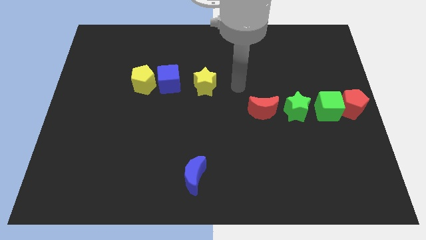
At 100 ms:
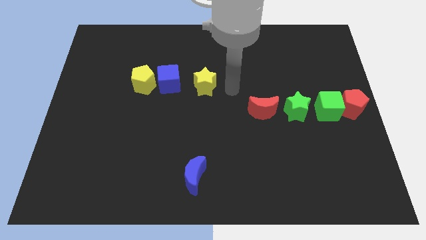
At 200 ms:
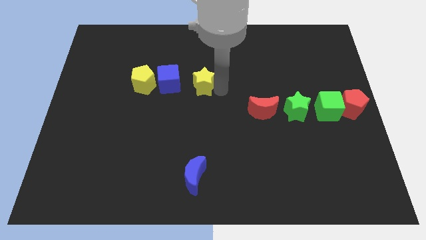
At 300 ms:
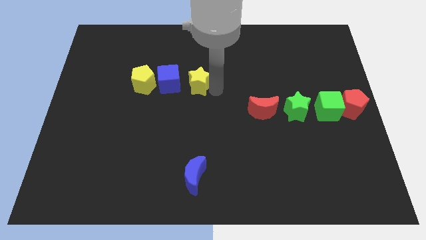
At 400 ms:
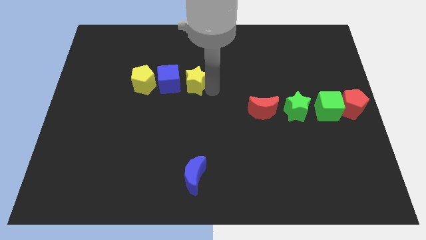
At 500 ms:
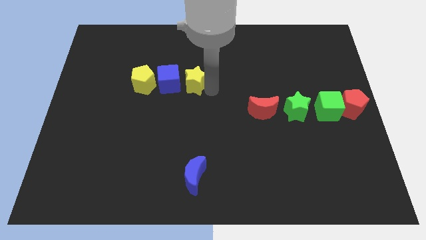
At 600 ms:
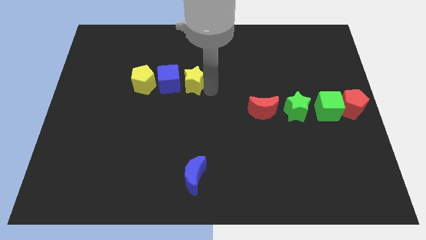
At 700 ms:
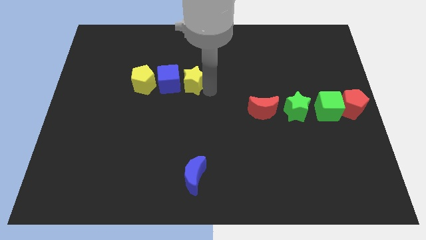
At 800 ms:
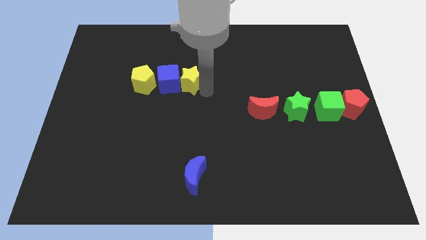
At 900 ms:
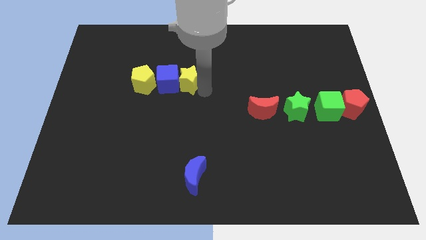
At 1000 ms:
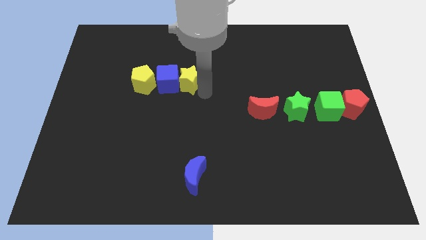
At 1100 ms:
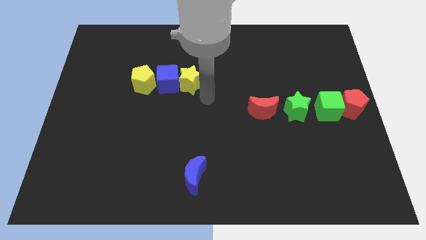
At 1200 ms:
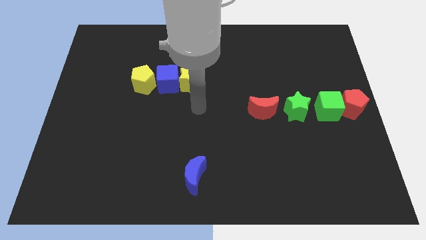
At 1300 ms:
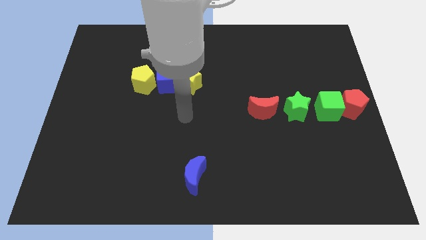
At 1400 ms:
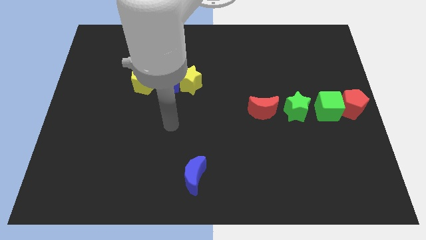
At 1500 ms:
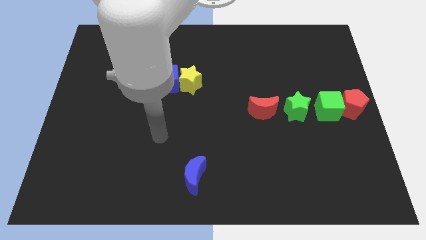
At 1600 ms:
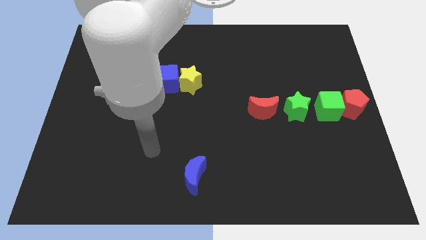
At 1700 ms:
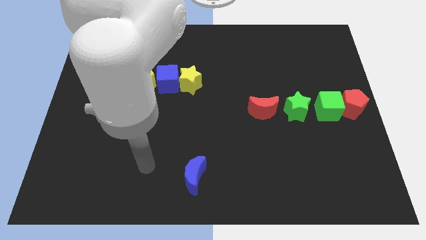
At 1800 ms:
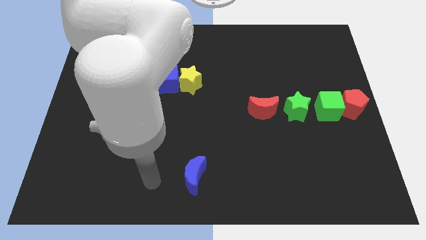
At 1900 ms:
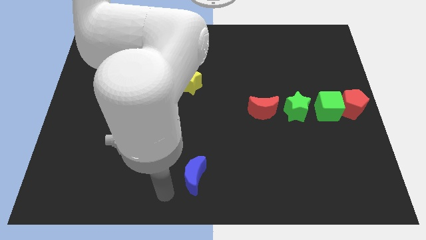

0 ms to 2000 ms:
move the yellow star into the blue cube

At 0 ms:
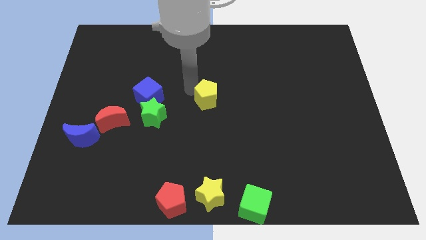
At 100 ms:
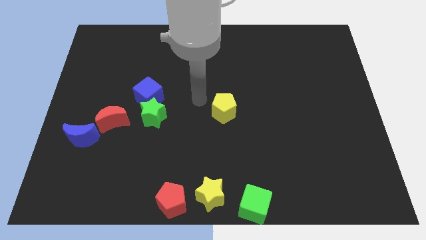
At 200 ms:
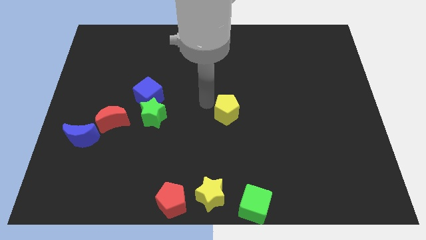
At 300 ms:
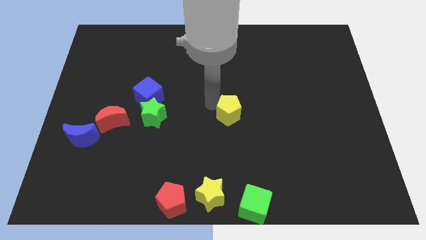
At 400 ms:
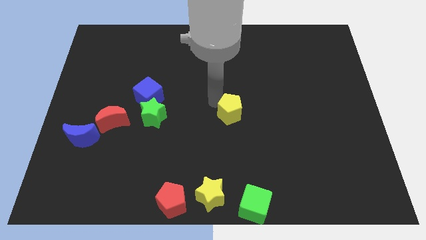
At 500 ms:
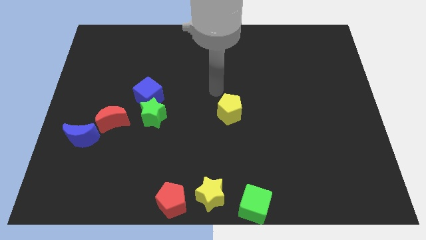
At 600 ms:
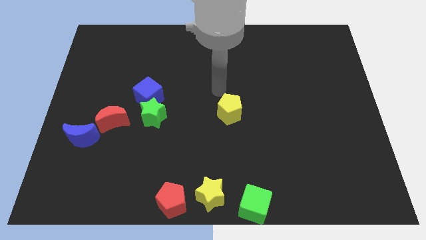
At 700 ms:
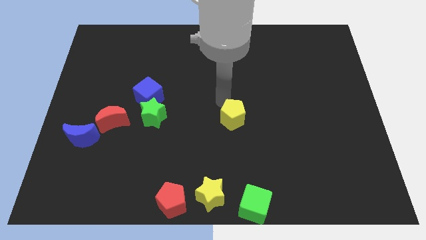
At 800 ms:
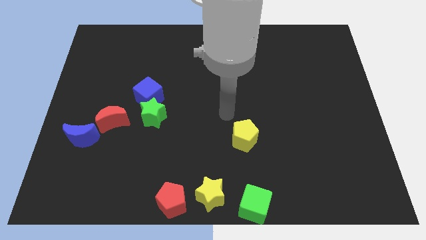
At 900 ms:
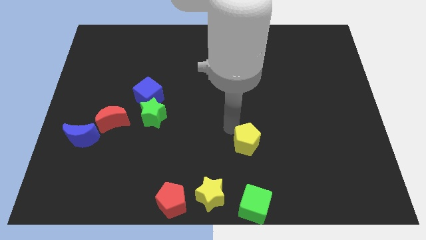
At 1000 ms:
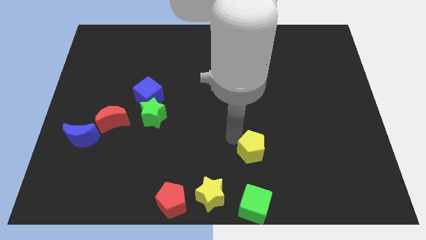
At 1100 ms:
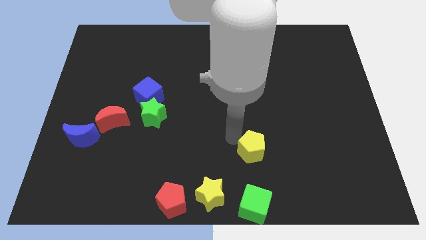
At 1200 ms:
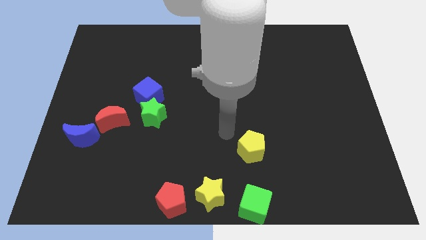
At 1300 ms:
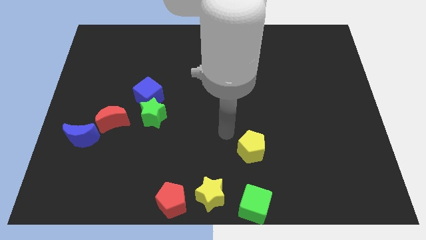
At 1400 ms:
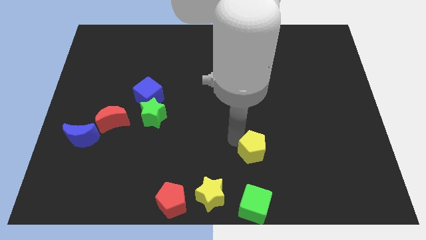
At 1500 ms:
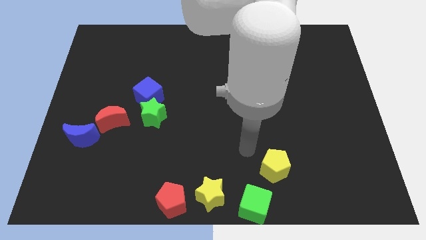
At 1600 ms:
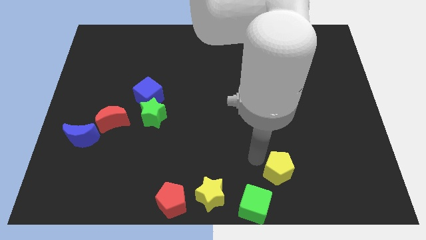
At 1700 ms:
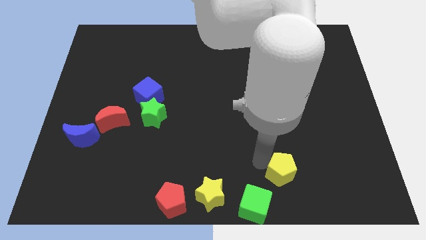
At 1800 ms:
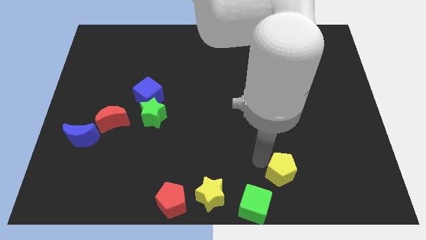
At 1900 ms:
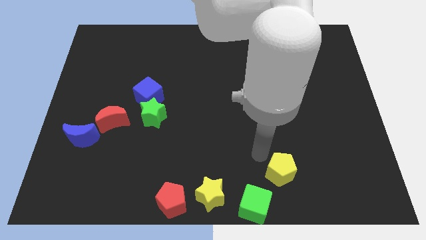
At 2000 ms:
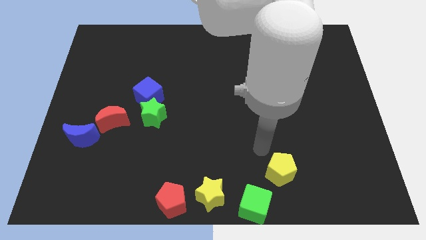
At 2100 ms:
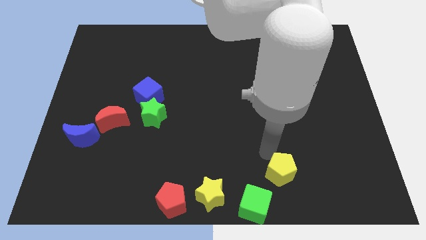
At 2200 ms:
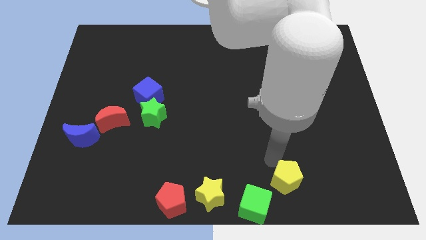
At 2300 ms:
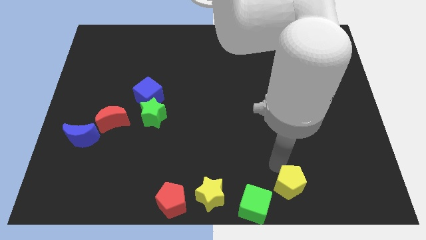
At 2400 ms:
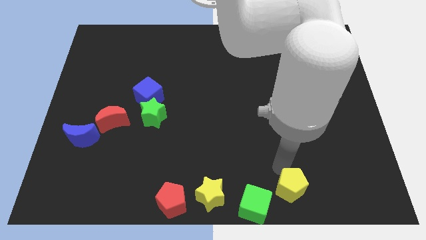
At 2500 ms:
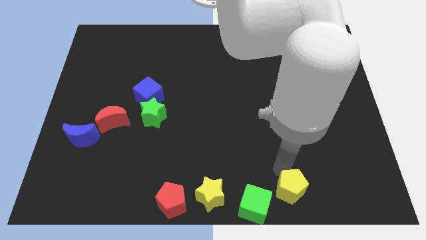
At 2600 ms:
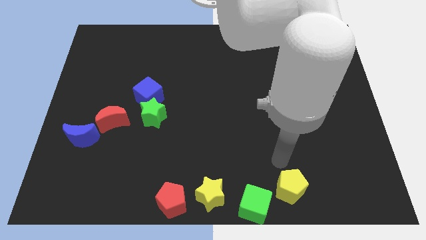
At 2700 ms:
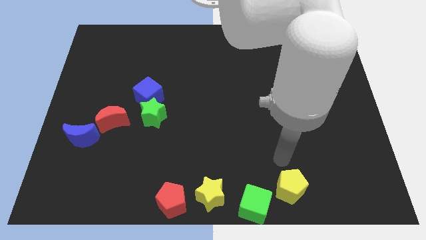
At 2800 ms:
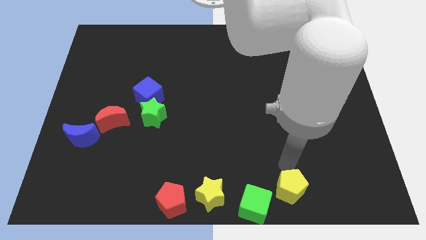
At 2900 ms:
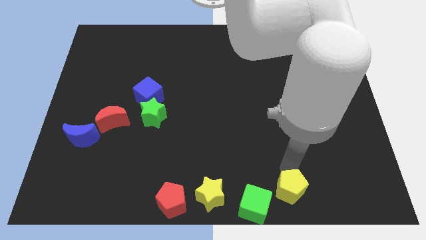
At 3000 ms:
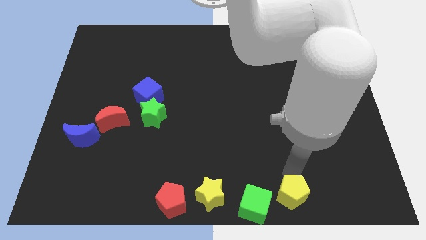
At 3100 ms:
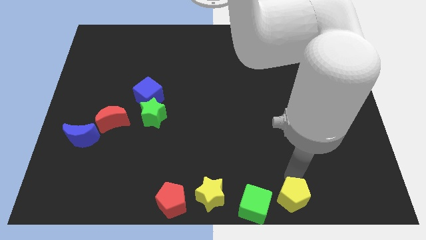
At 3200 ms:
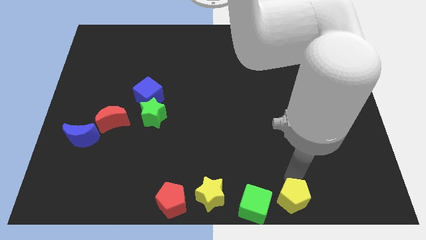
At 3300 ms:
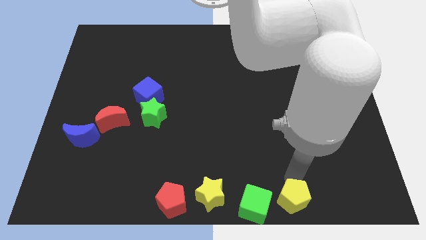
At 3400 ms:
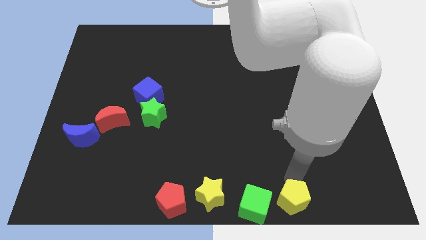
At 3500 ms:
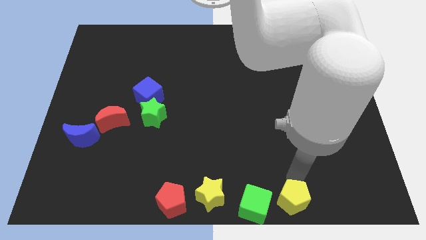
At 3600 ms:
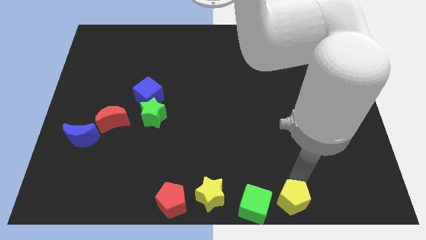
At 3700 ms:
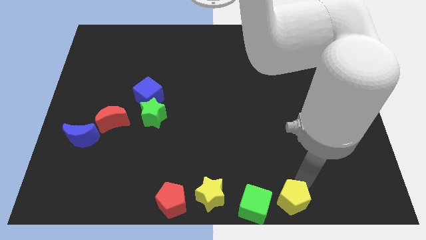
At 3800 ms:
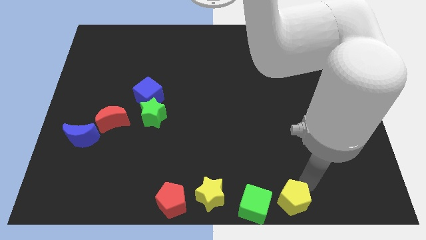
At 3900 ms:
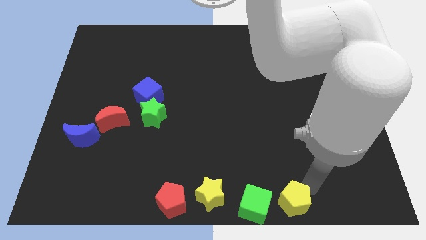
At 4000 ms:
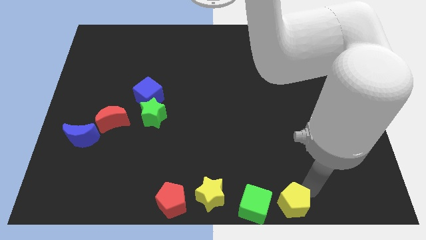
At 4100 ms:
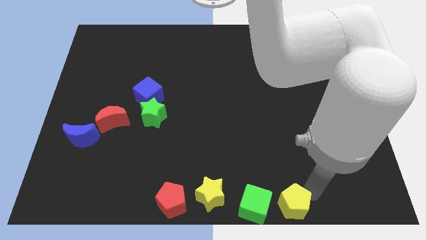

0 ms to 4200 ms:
move the yellow pentagon to the right side of the green cube

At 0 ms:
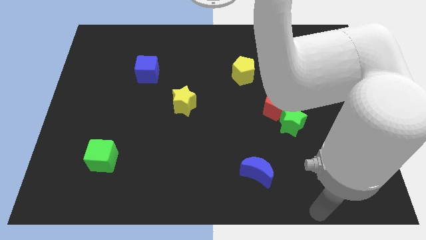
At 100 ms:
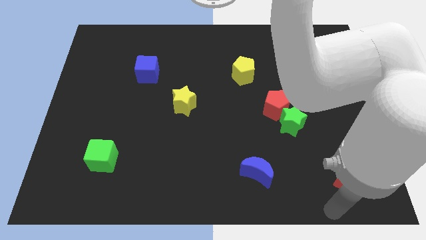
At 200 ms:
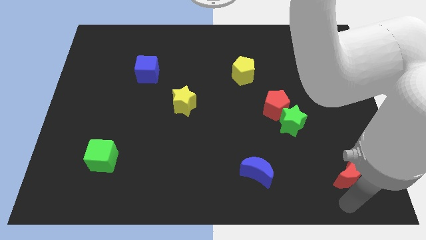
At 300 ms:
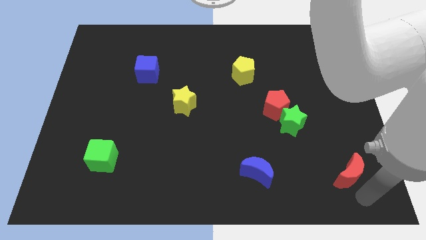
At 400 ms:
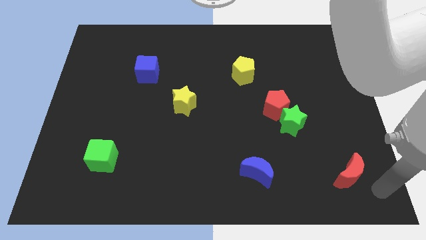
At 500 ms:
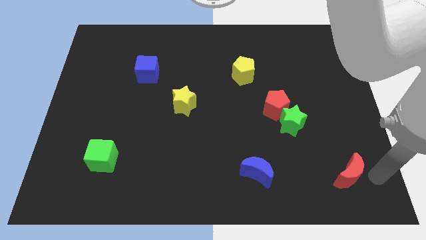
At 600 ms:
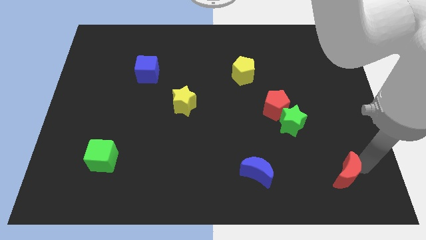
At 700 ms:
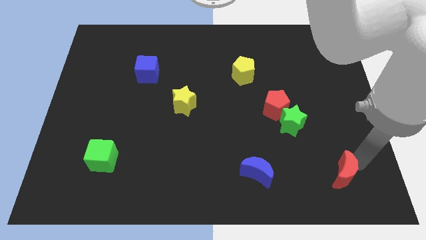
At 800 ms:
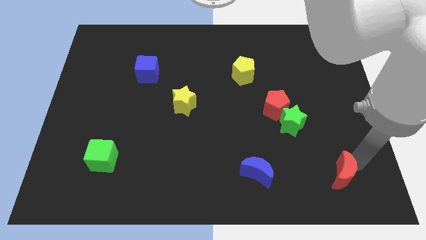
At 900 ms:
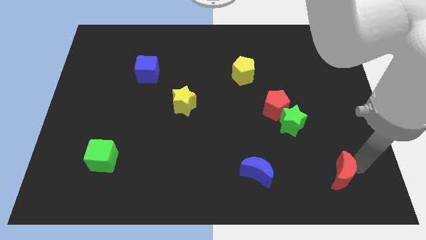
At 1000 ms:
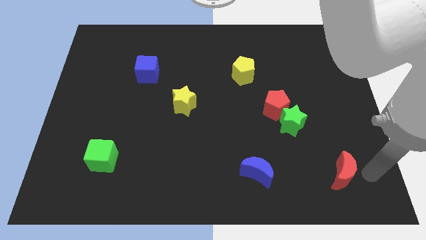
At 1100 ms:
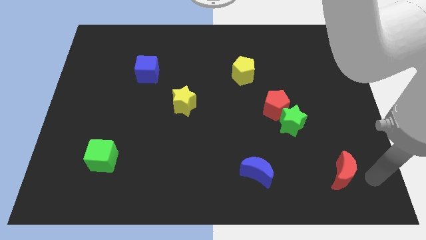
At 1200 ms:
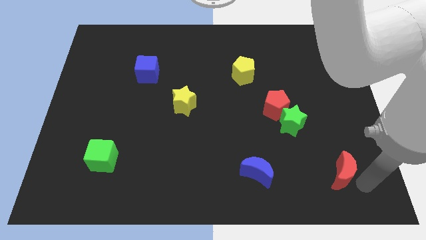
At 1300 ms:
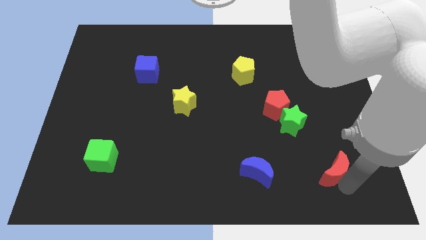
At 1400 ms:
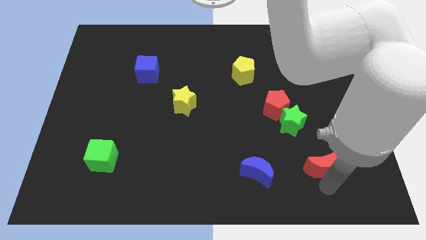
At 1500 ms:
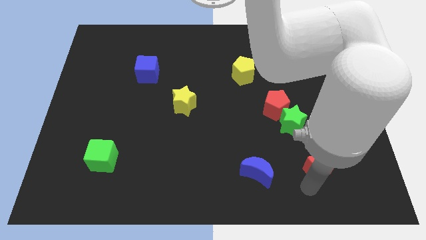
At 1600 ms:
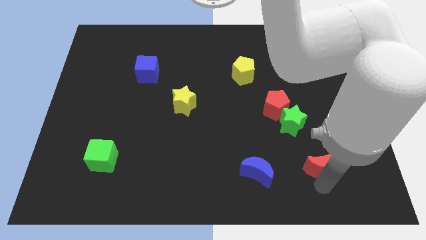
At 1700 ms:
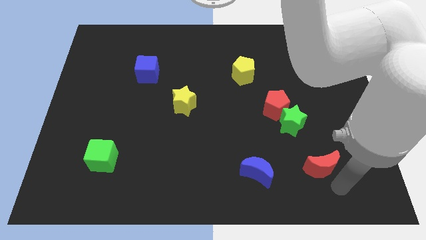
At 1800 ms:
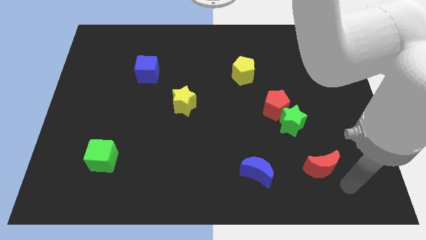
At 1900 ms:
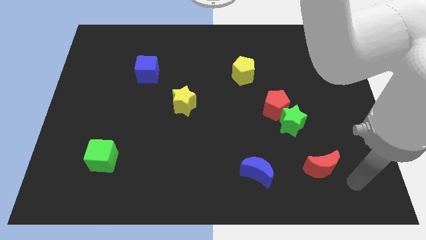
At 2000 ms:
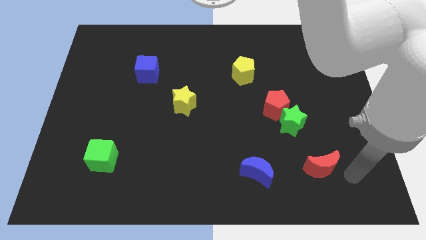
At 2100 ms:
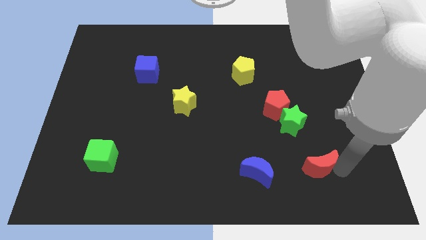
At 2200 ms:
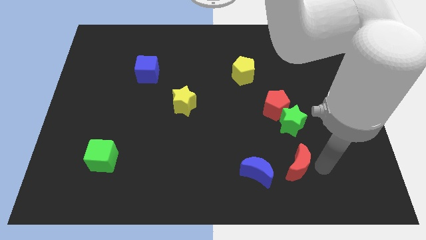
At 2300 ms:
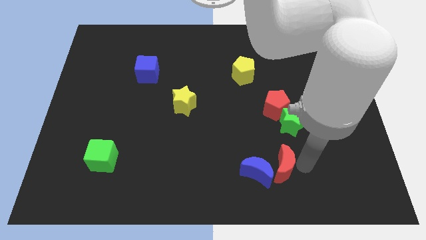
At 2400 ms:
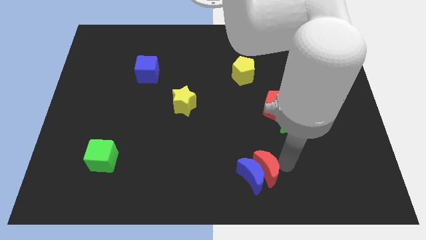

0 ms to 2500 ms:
move the red moon into the blue moon

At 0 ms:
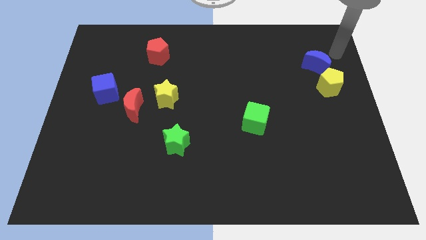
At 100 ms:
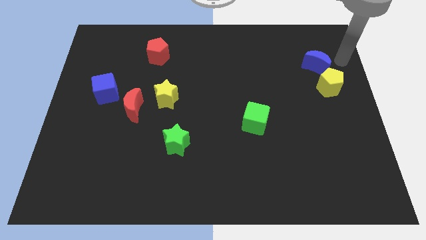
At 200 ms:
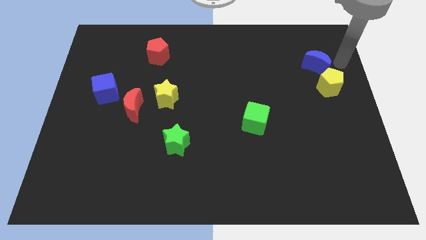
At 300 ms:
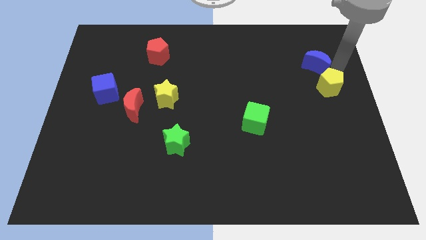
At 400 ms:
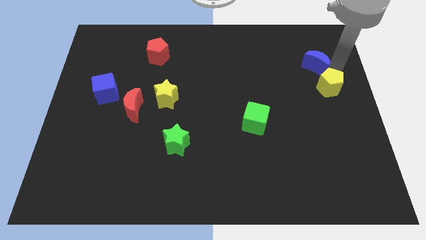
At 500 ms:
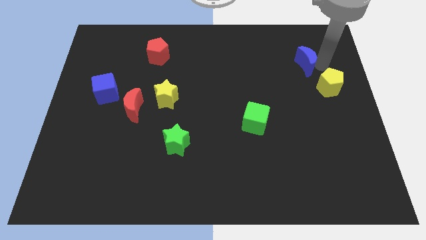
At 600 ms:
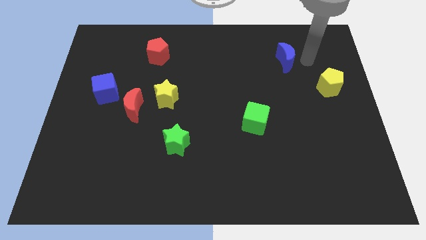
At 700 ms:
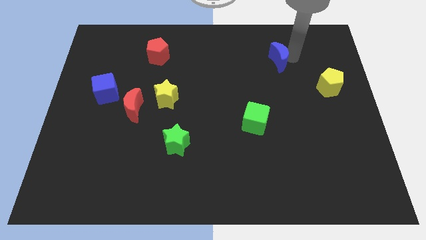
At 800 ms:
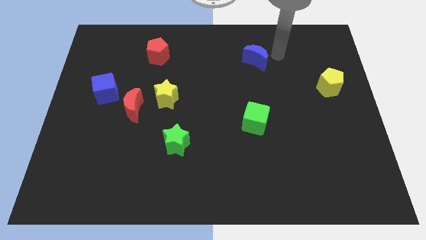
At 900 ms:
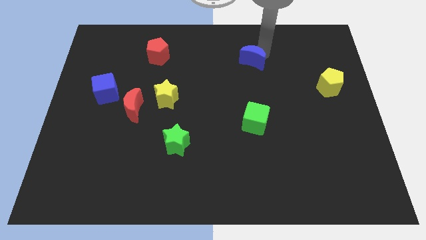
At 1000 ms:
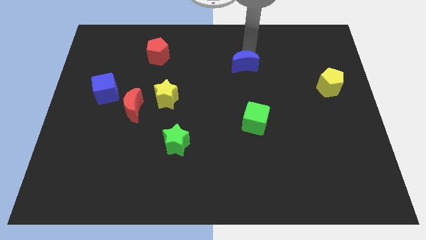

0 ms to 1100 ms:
move the blue moon above the green cube
